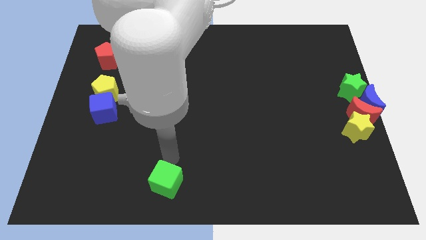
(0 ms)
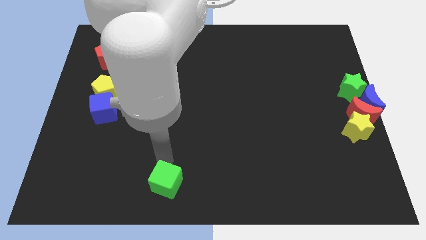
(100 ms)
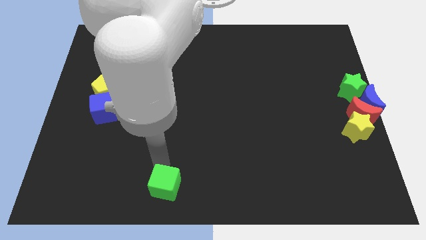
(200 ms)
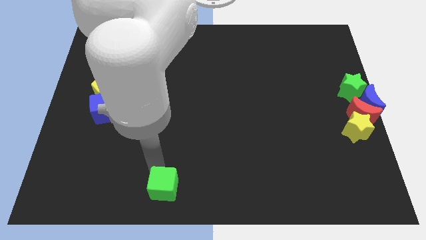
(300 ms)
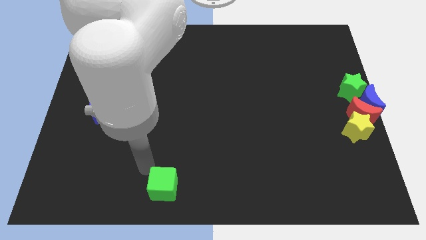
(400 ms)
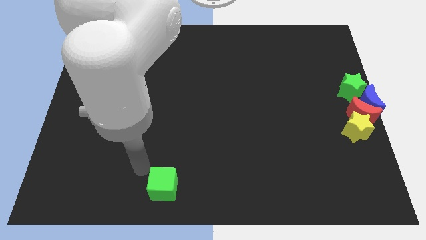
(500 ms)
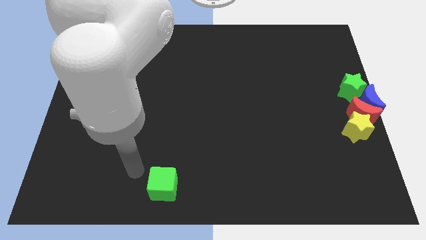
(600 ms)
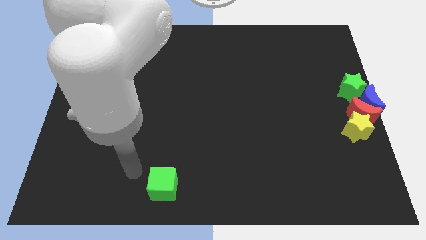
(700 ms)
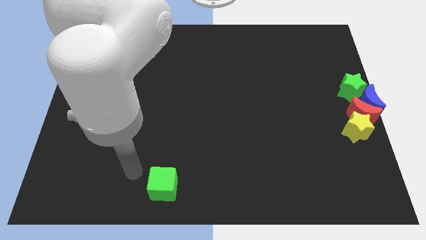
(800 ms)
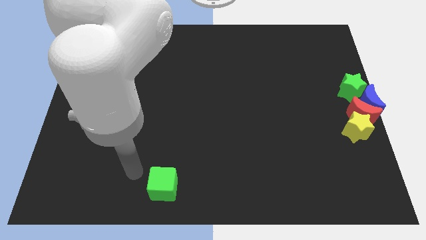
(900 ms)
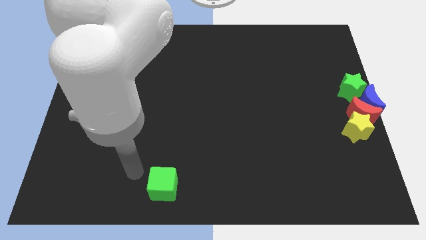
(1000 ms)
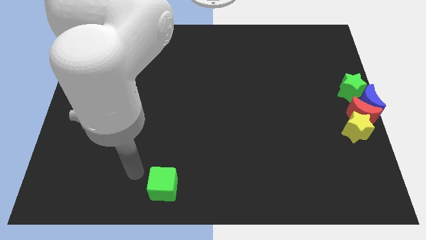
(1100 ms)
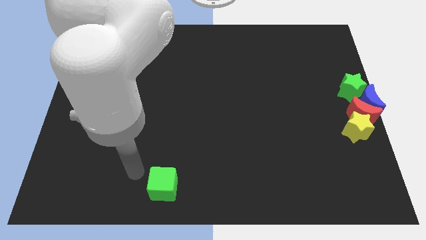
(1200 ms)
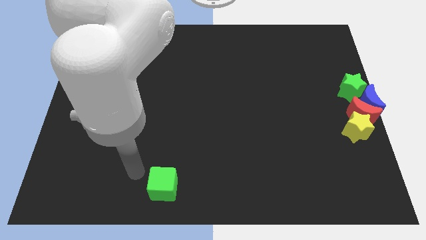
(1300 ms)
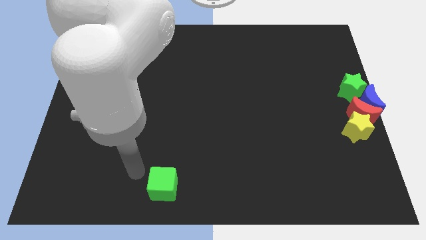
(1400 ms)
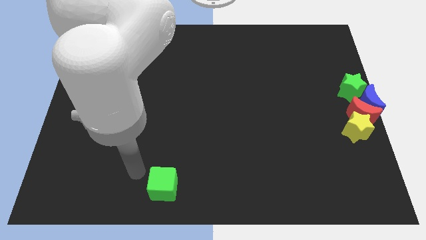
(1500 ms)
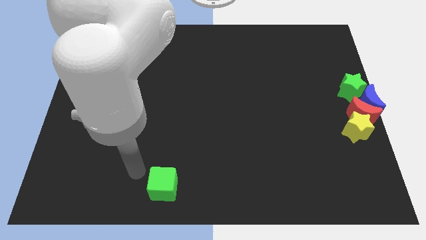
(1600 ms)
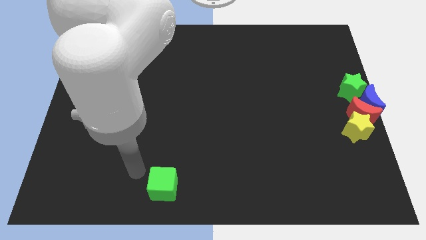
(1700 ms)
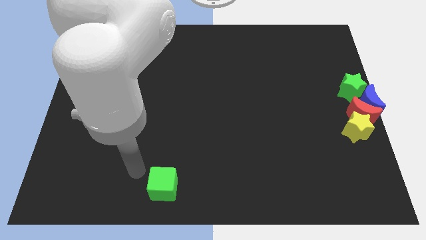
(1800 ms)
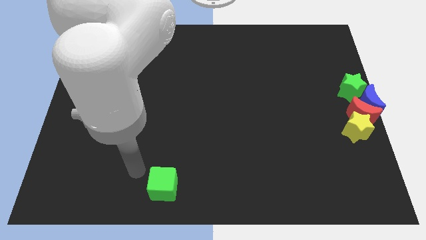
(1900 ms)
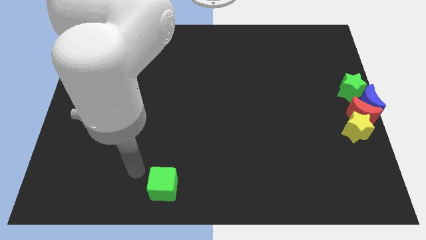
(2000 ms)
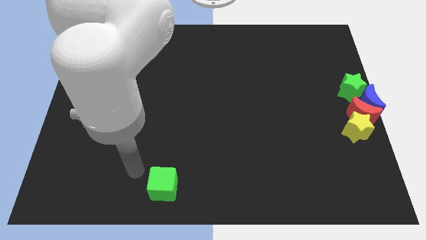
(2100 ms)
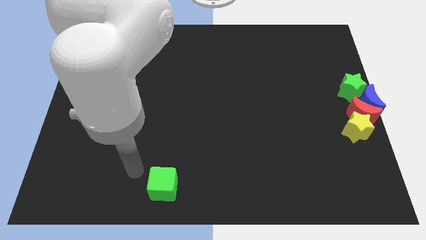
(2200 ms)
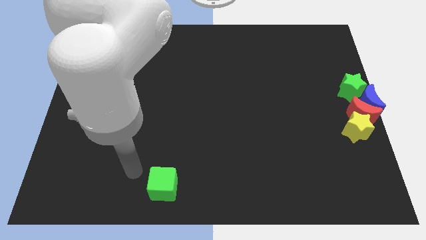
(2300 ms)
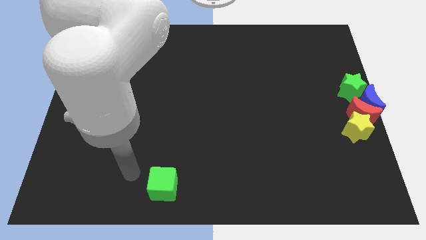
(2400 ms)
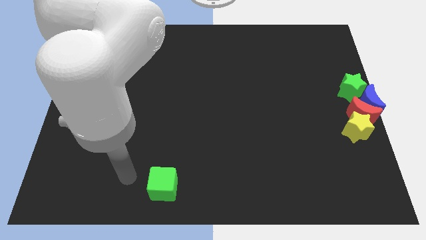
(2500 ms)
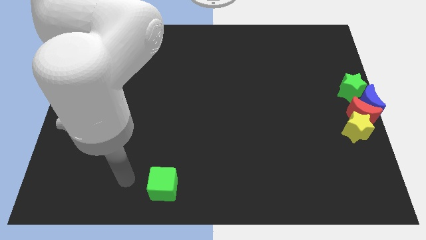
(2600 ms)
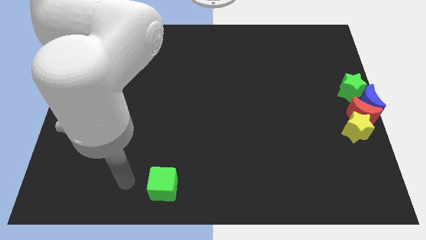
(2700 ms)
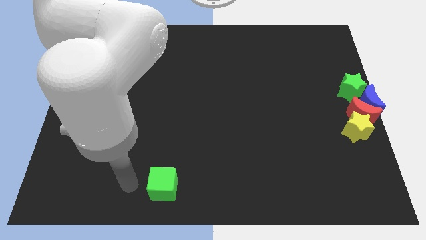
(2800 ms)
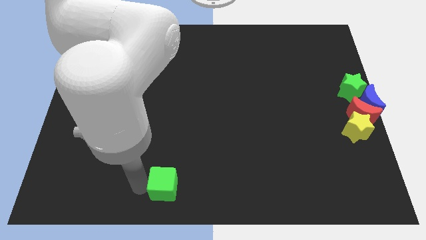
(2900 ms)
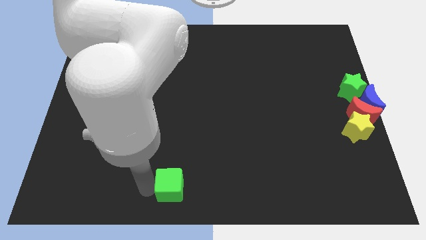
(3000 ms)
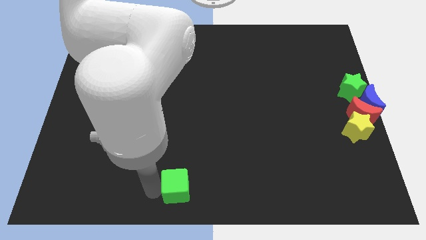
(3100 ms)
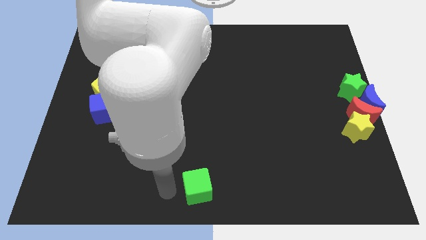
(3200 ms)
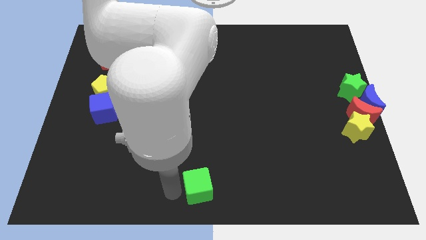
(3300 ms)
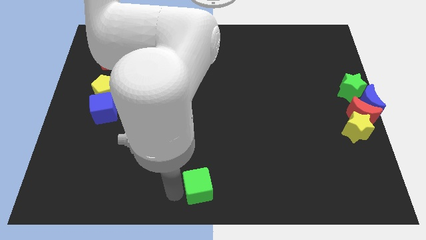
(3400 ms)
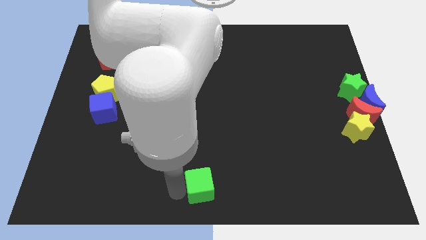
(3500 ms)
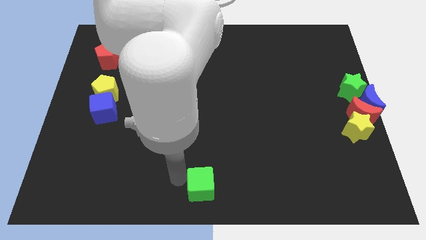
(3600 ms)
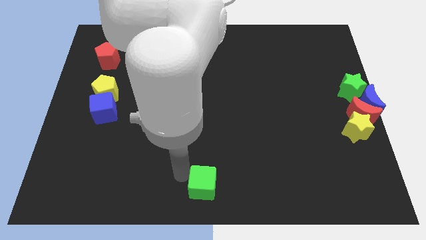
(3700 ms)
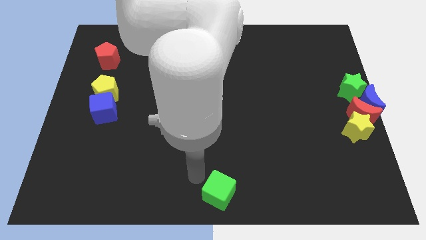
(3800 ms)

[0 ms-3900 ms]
push the green cube to the bottom center of the board

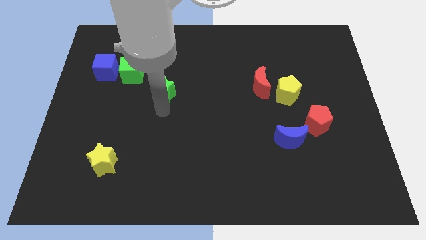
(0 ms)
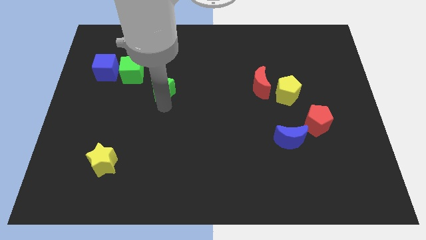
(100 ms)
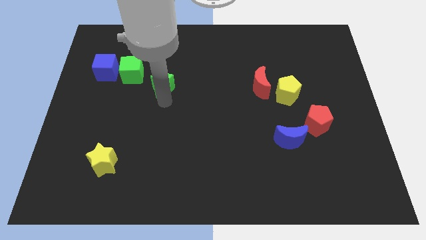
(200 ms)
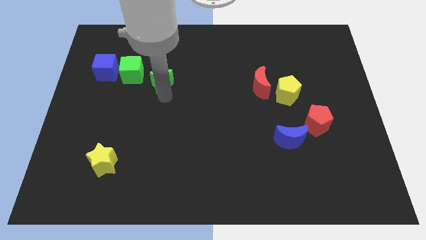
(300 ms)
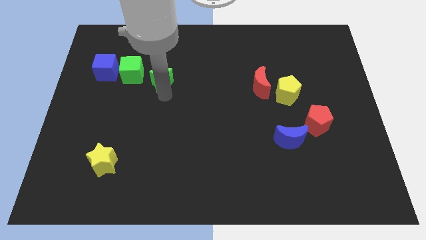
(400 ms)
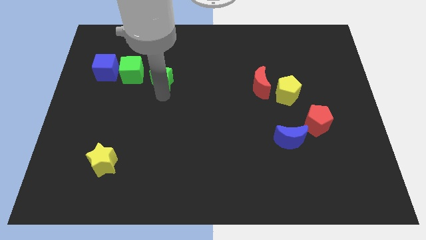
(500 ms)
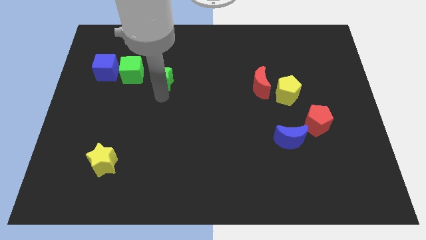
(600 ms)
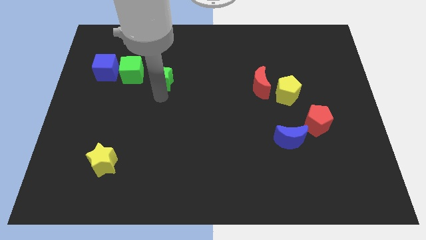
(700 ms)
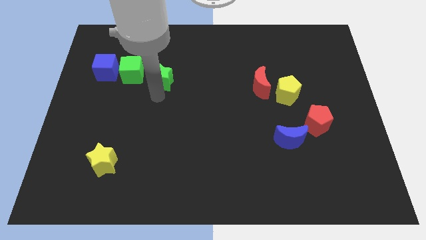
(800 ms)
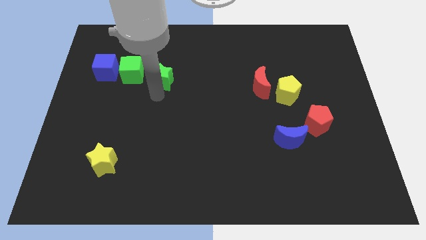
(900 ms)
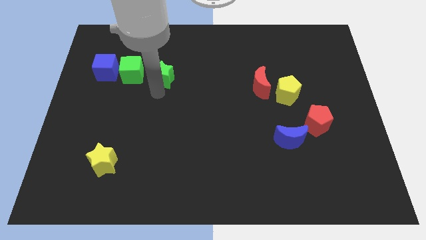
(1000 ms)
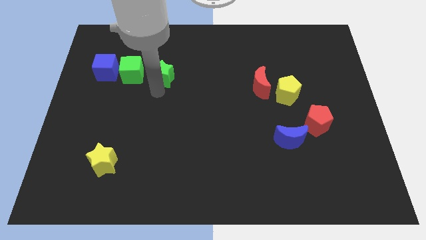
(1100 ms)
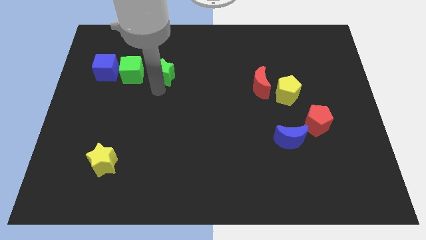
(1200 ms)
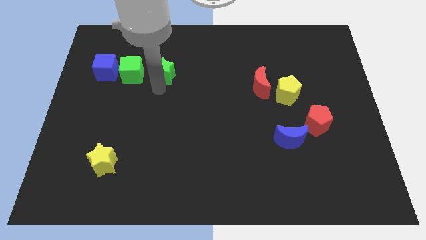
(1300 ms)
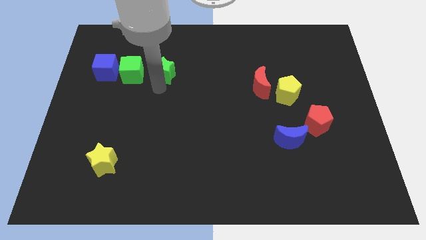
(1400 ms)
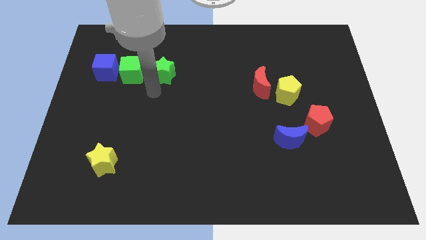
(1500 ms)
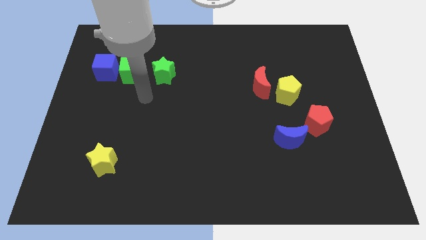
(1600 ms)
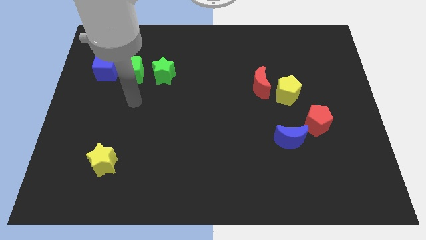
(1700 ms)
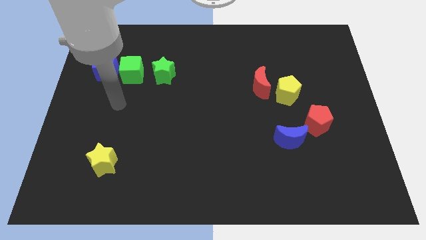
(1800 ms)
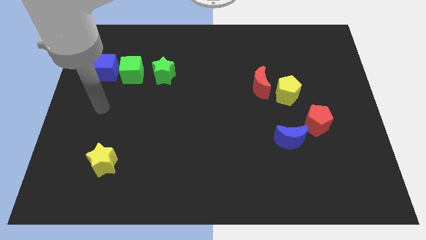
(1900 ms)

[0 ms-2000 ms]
move the green star to the right side of the green cube

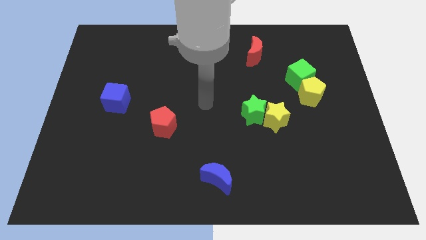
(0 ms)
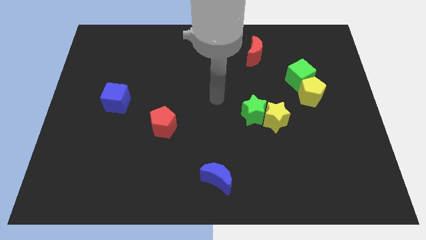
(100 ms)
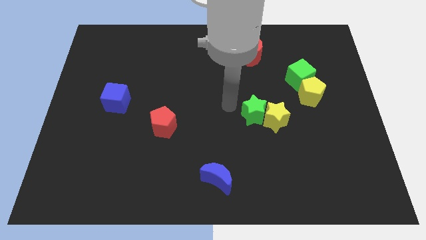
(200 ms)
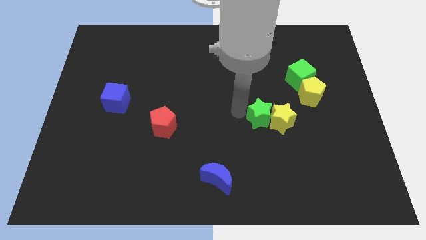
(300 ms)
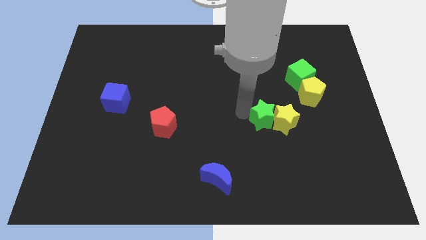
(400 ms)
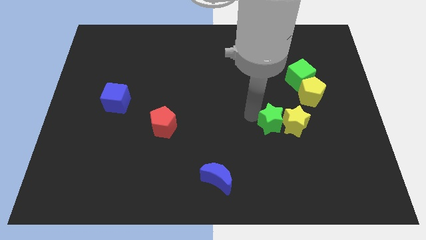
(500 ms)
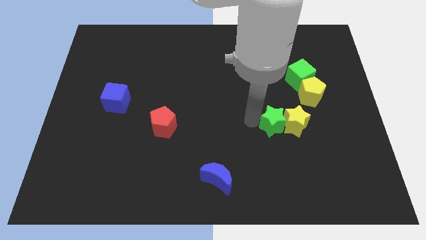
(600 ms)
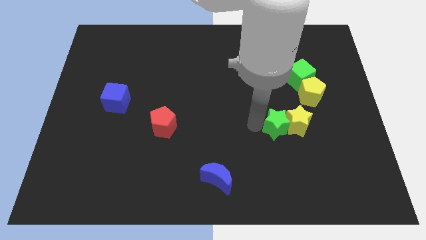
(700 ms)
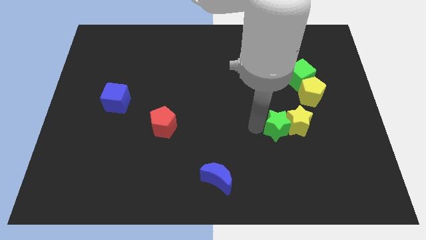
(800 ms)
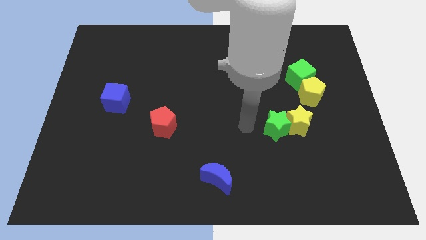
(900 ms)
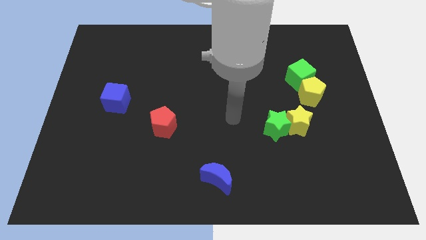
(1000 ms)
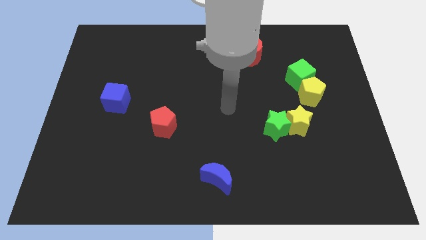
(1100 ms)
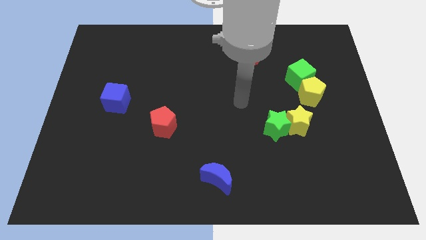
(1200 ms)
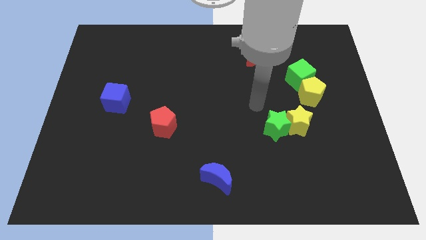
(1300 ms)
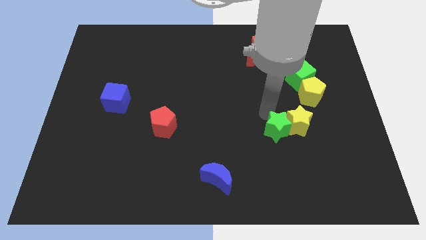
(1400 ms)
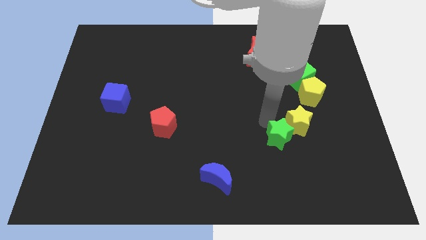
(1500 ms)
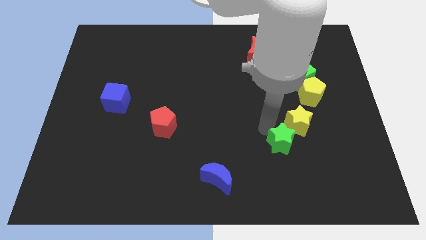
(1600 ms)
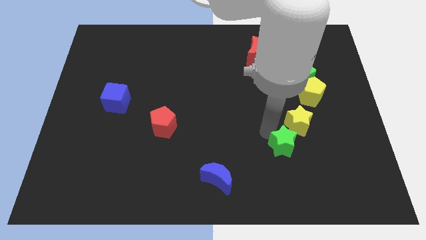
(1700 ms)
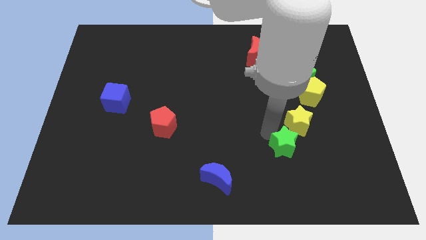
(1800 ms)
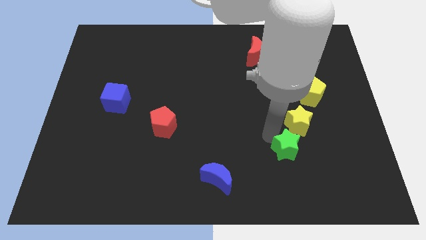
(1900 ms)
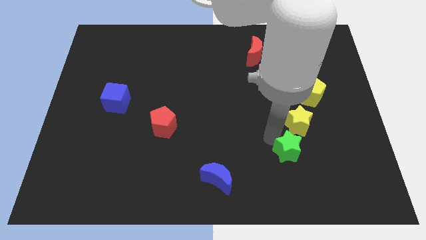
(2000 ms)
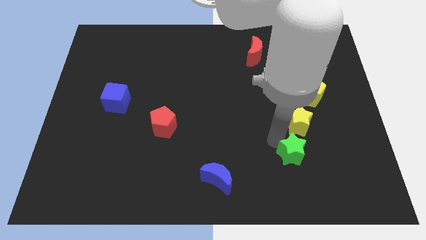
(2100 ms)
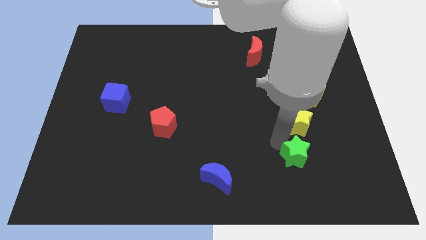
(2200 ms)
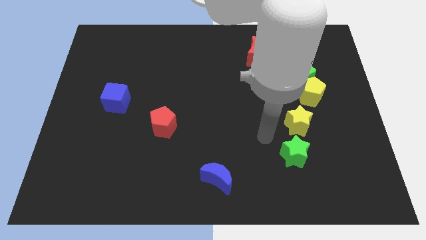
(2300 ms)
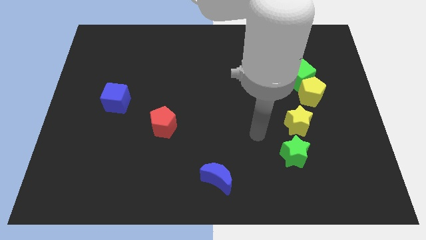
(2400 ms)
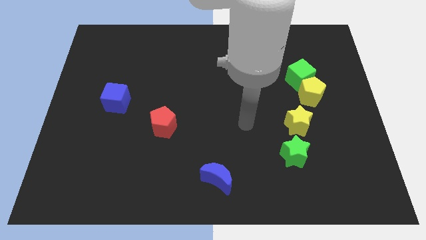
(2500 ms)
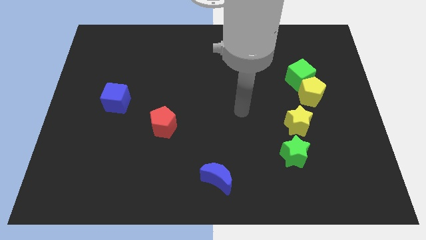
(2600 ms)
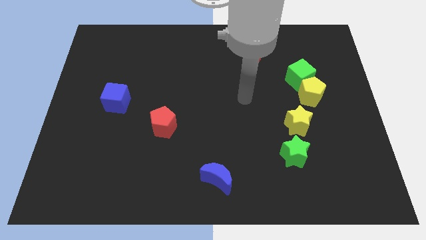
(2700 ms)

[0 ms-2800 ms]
push the yellow star and green star diagonally in a line with the yellow pentagon

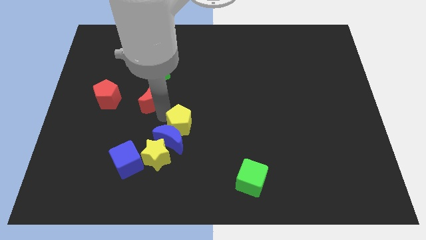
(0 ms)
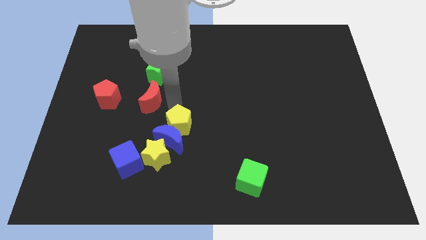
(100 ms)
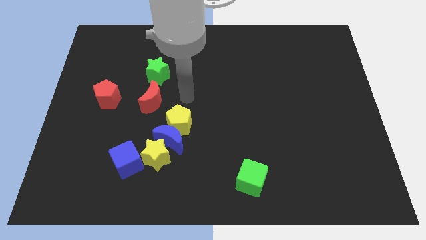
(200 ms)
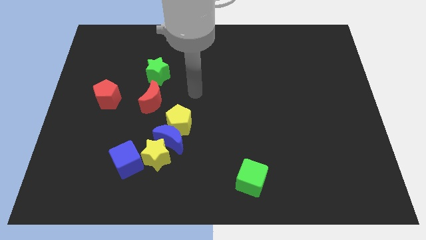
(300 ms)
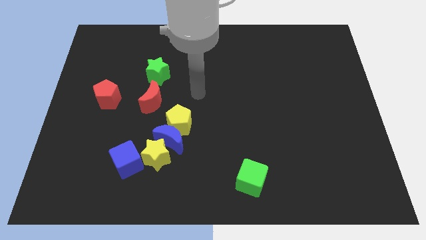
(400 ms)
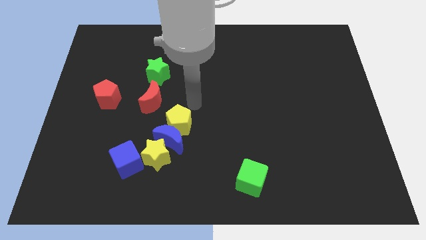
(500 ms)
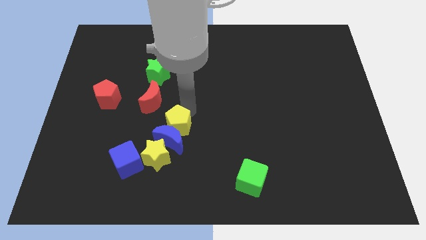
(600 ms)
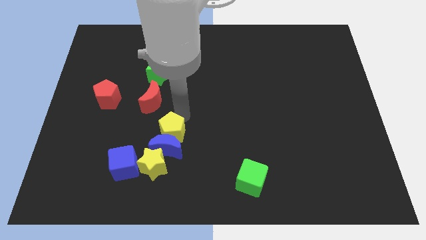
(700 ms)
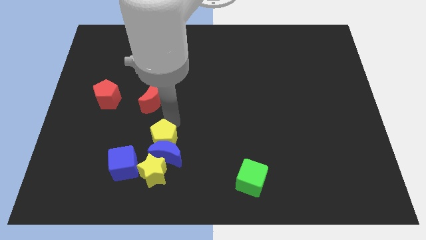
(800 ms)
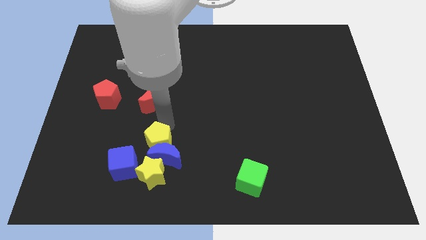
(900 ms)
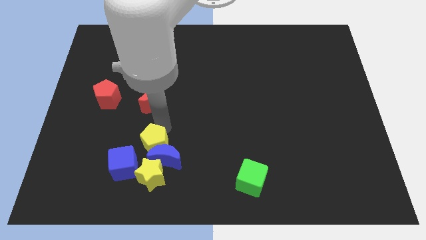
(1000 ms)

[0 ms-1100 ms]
push the yellow pentagon into the blue crescent
